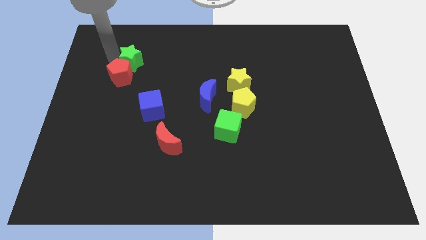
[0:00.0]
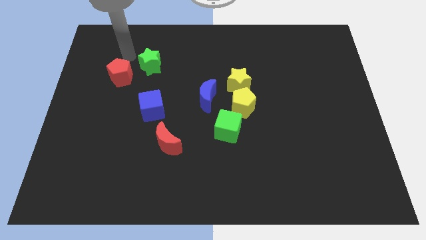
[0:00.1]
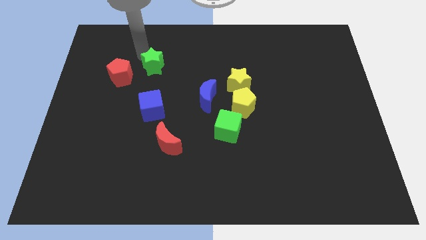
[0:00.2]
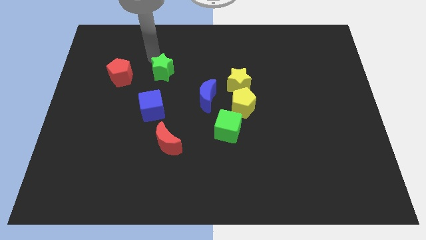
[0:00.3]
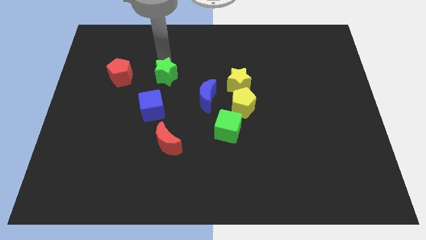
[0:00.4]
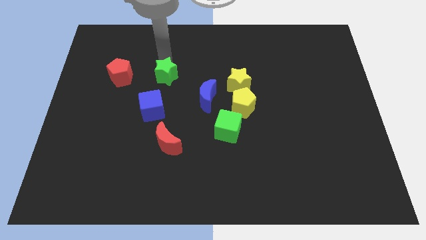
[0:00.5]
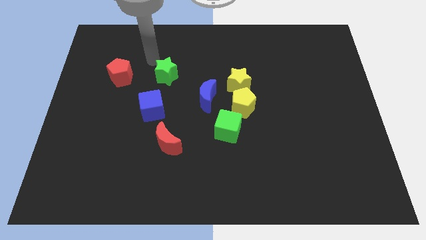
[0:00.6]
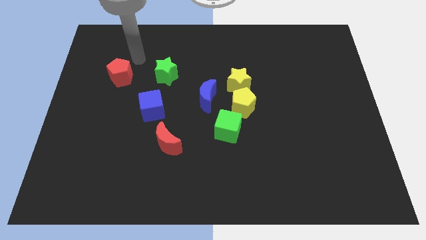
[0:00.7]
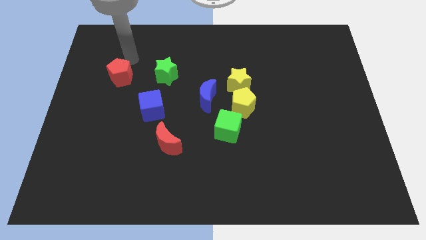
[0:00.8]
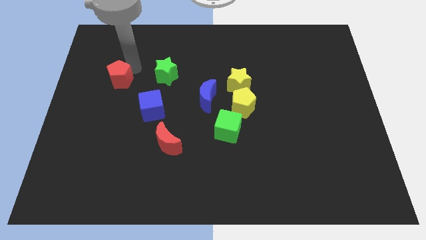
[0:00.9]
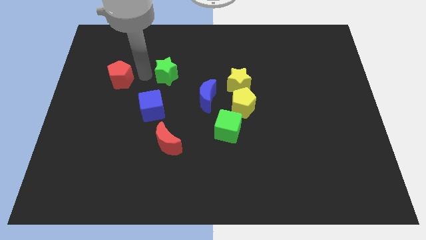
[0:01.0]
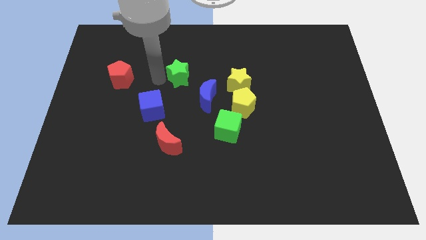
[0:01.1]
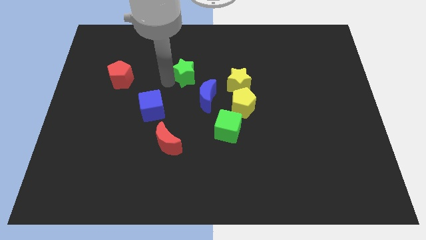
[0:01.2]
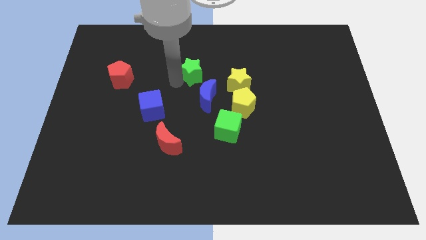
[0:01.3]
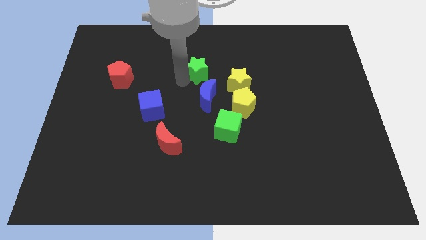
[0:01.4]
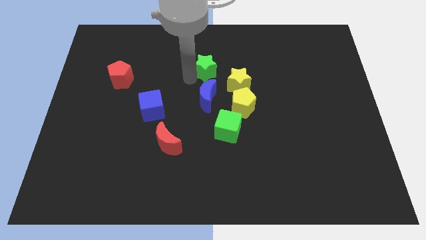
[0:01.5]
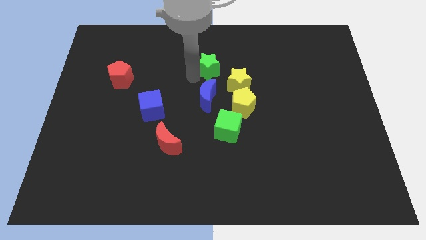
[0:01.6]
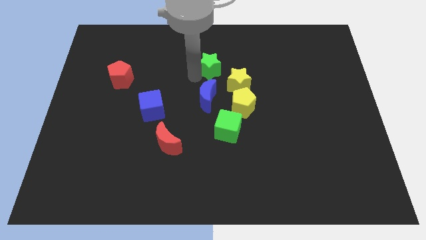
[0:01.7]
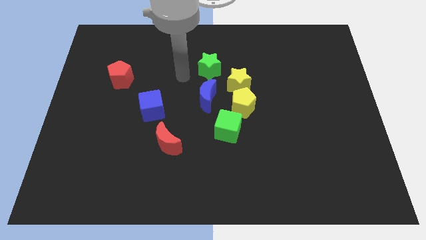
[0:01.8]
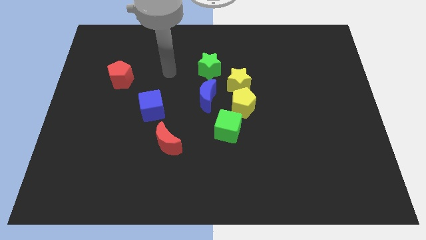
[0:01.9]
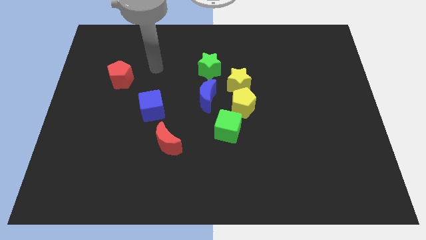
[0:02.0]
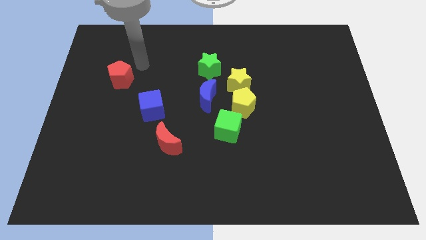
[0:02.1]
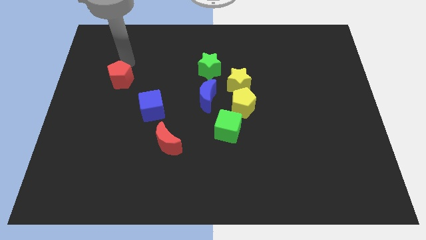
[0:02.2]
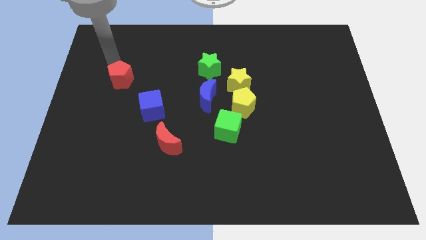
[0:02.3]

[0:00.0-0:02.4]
push the green star to the top of blue crescent

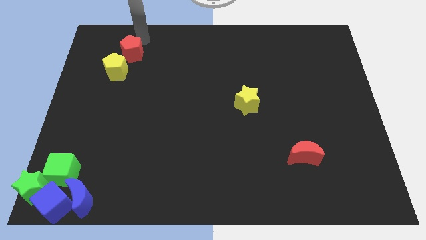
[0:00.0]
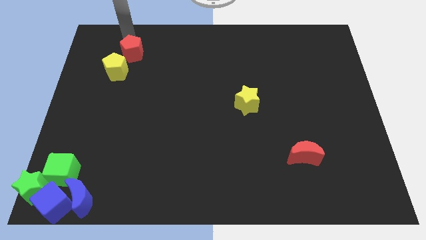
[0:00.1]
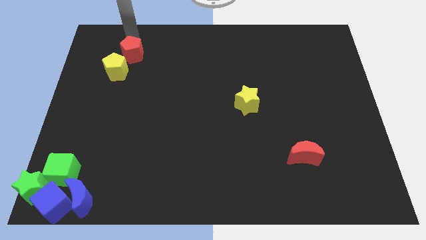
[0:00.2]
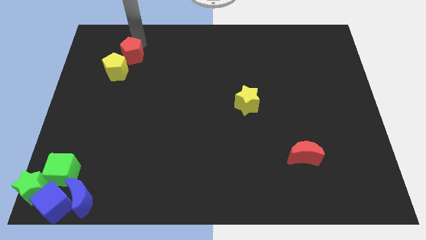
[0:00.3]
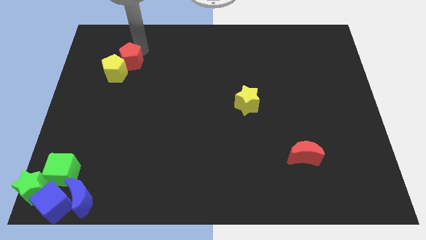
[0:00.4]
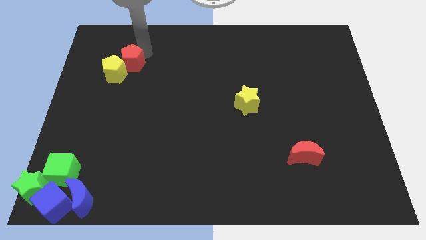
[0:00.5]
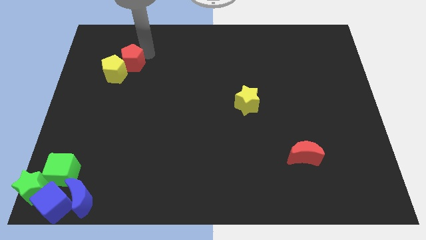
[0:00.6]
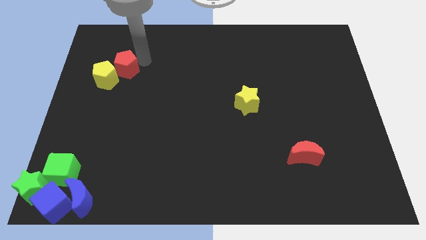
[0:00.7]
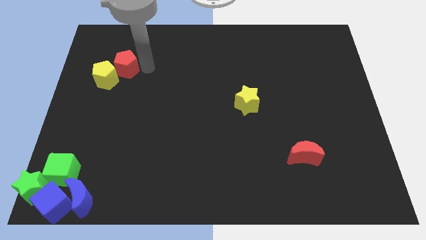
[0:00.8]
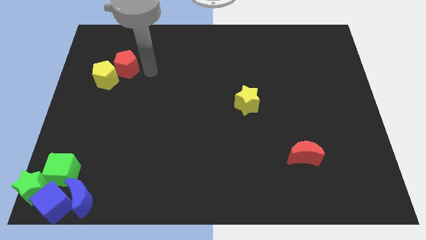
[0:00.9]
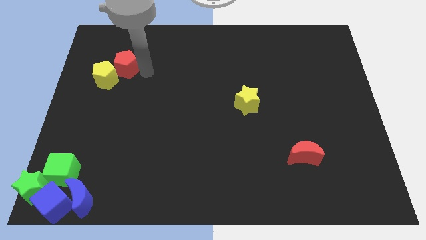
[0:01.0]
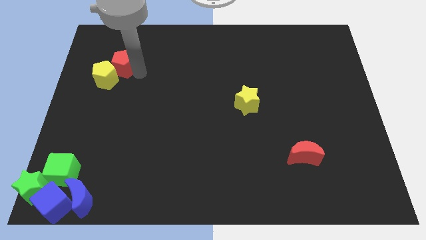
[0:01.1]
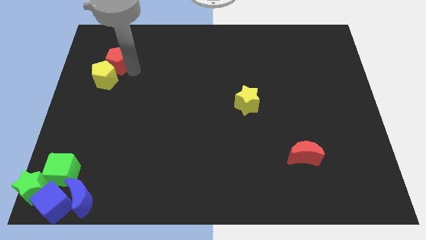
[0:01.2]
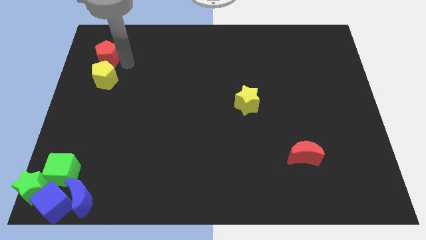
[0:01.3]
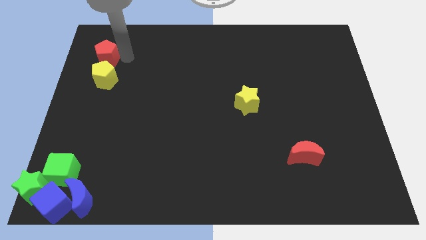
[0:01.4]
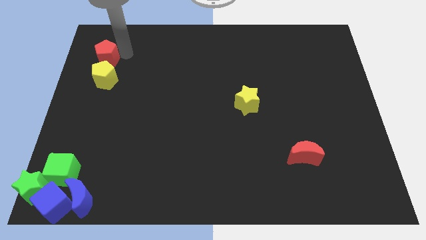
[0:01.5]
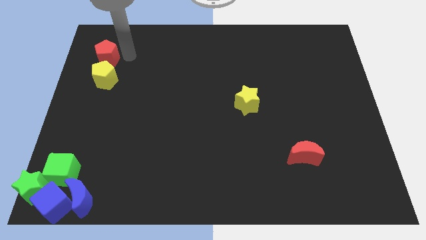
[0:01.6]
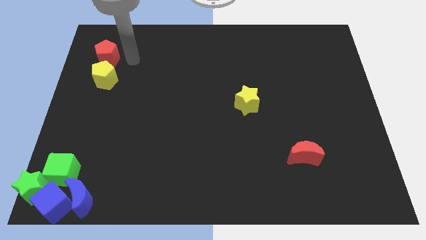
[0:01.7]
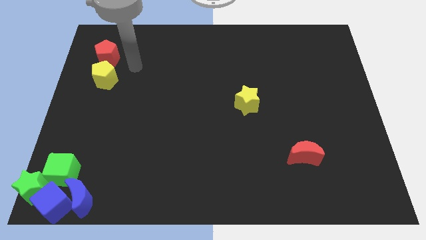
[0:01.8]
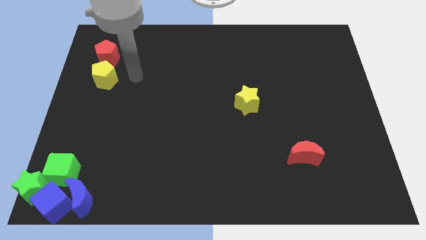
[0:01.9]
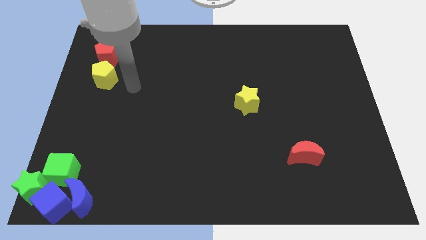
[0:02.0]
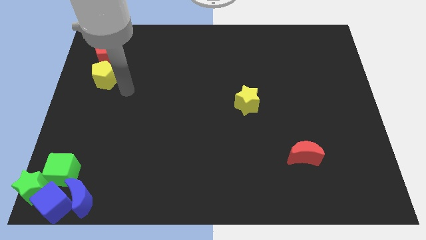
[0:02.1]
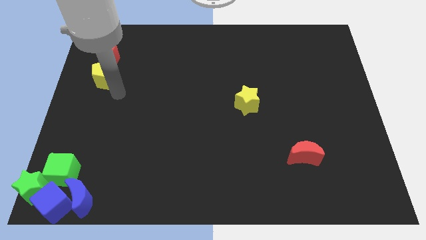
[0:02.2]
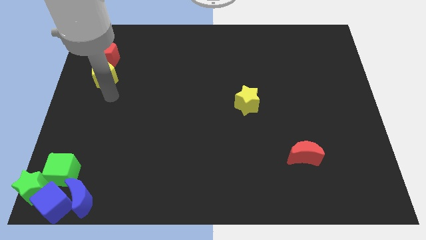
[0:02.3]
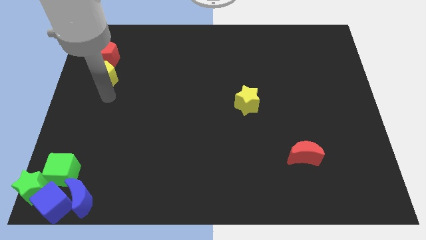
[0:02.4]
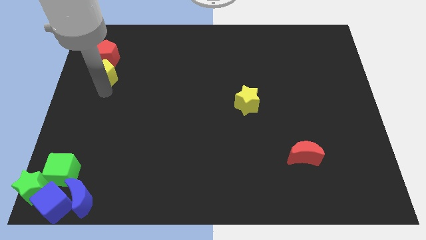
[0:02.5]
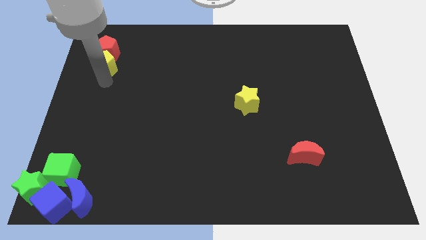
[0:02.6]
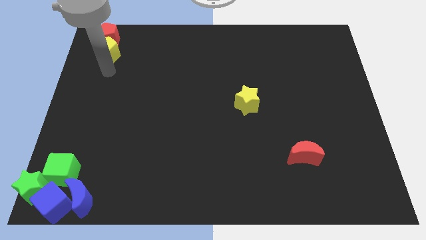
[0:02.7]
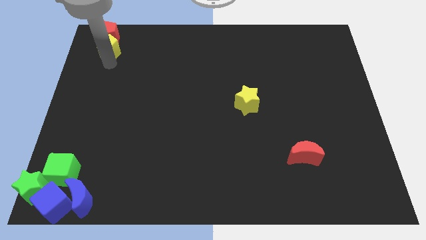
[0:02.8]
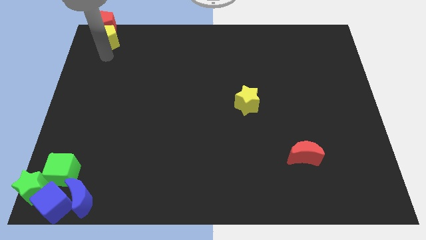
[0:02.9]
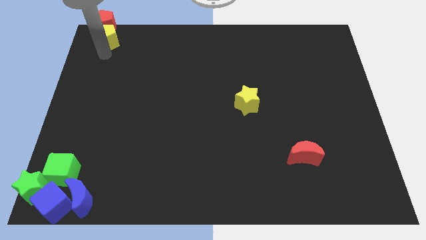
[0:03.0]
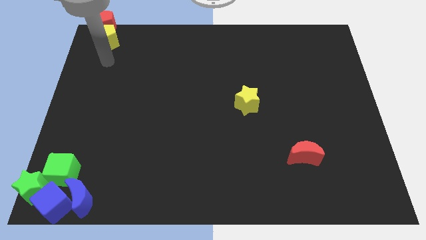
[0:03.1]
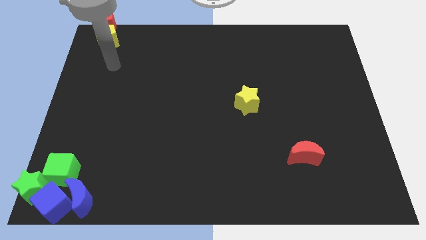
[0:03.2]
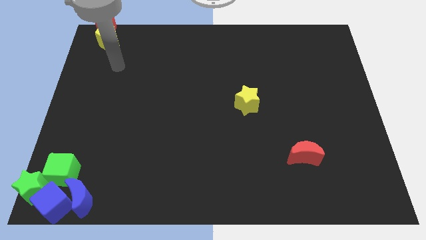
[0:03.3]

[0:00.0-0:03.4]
push the yellow pentagon into the red pentagon towards the top left of the board

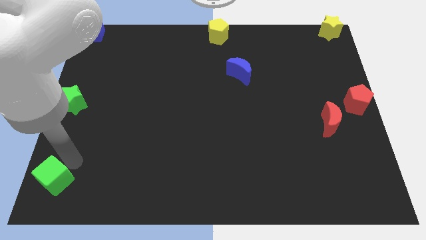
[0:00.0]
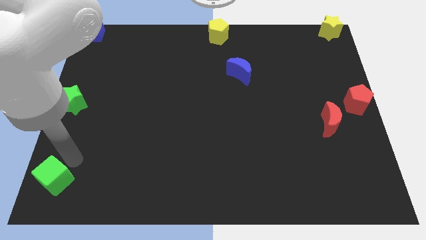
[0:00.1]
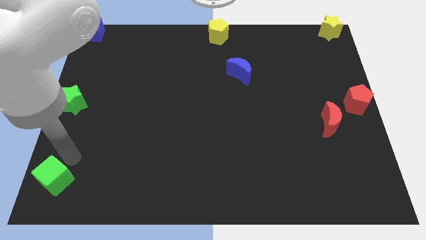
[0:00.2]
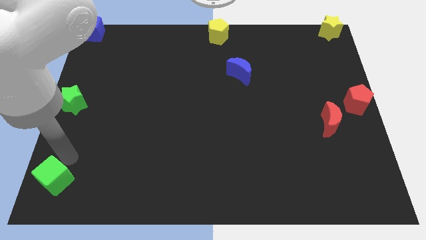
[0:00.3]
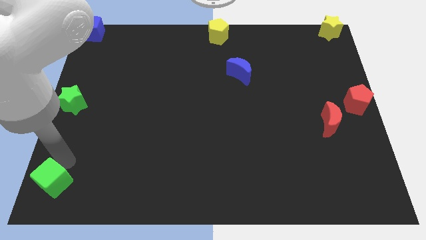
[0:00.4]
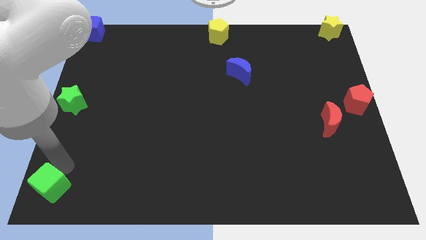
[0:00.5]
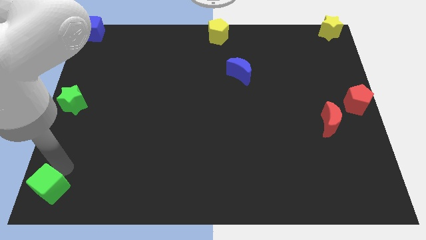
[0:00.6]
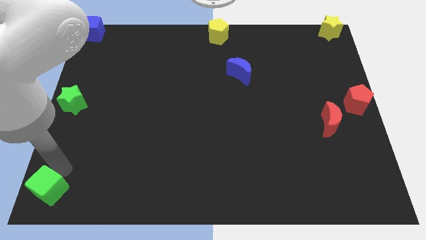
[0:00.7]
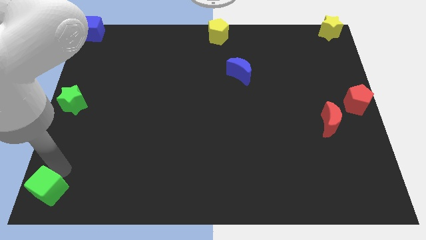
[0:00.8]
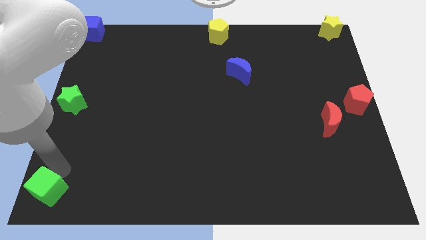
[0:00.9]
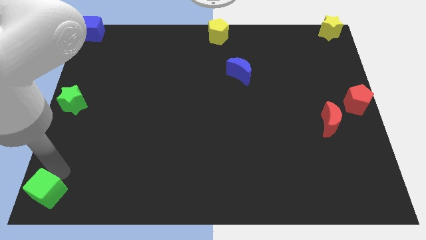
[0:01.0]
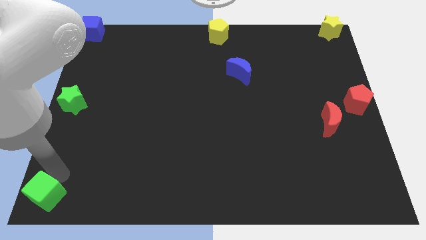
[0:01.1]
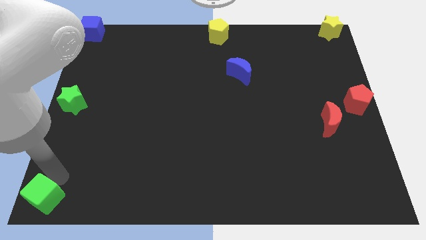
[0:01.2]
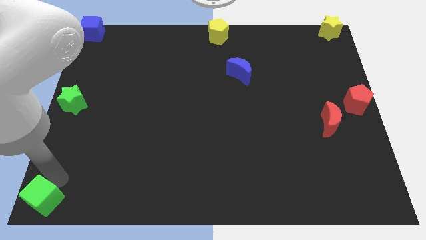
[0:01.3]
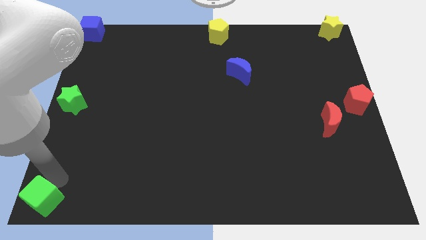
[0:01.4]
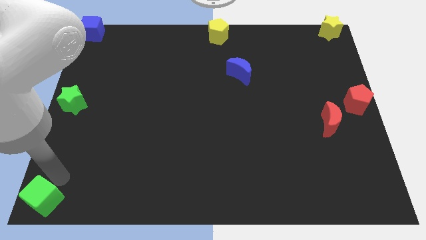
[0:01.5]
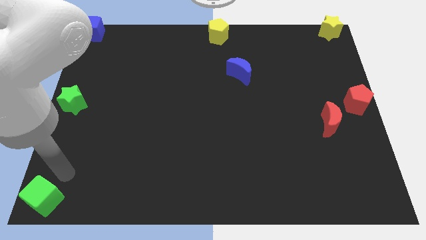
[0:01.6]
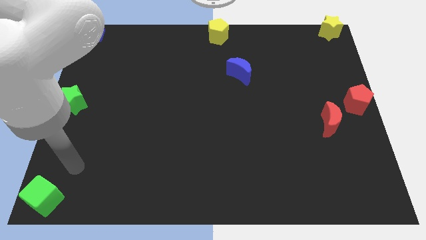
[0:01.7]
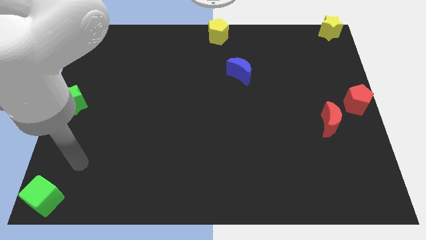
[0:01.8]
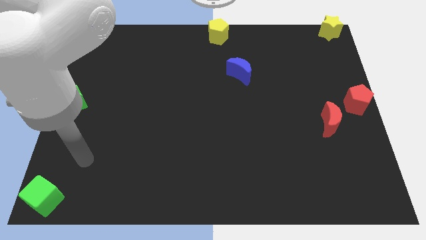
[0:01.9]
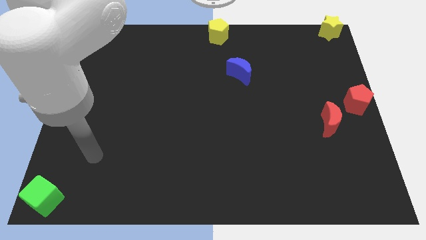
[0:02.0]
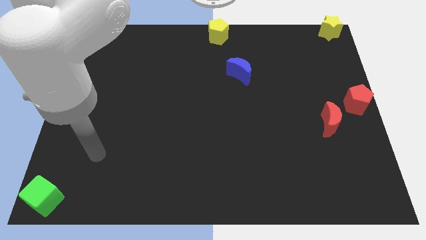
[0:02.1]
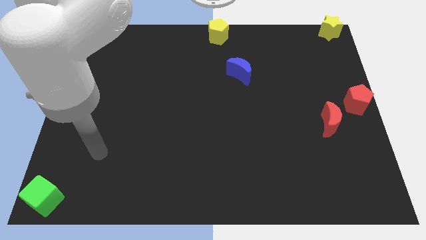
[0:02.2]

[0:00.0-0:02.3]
push the green cube to the left bottom corner of the board

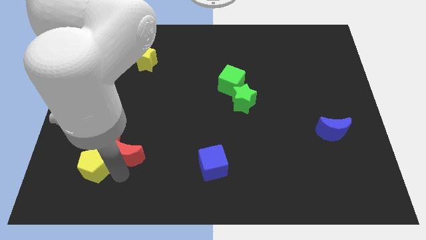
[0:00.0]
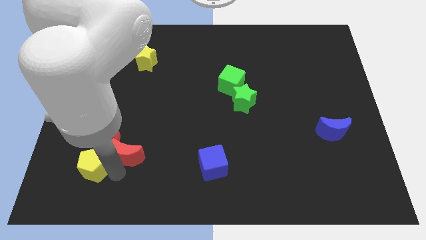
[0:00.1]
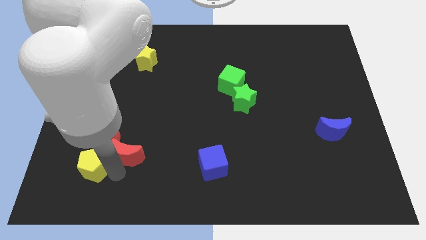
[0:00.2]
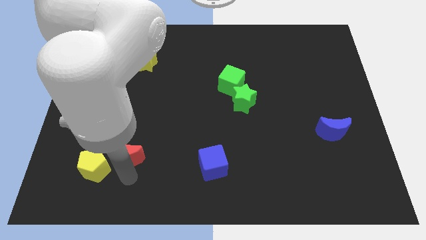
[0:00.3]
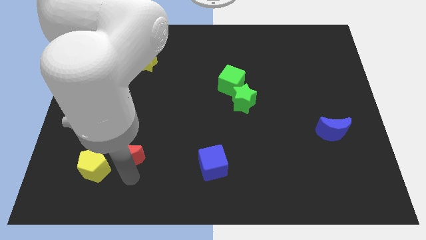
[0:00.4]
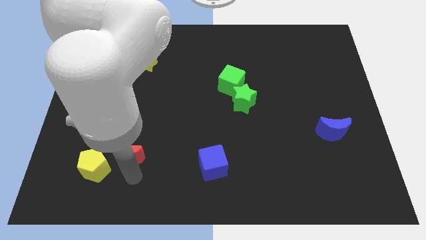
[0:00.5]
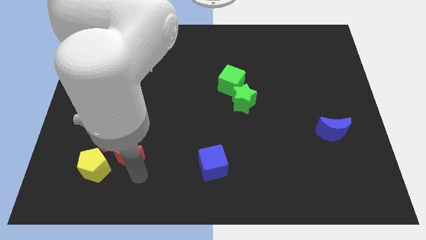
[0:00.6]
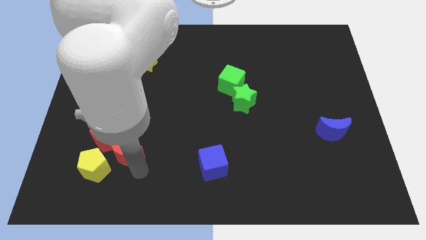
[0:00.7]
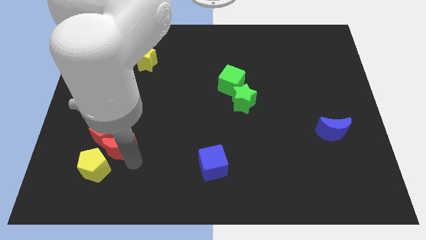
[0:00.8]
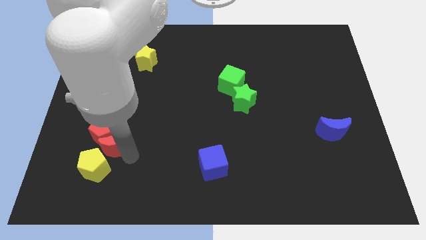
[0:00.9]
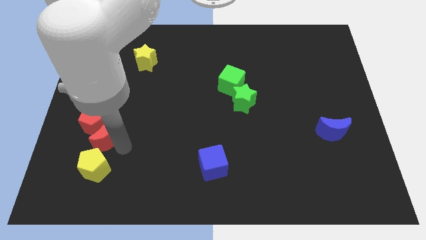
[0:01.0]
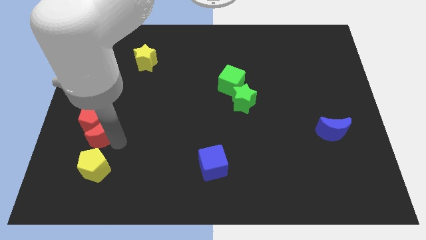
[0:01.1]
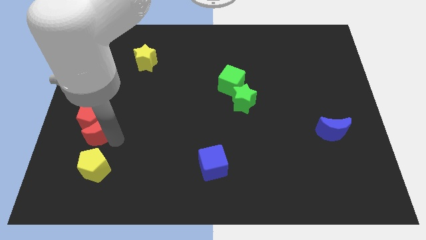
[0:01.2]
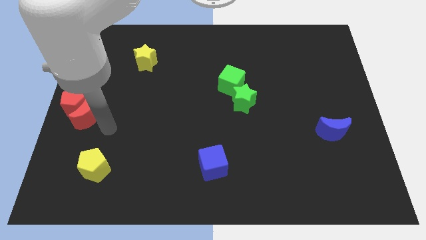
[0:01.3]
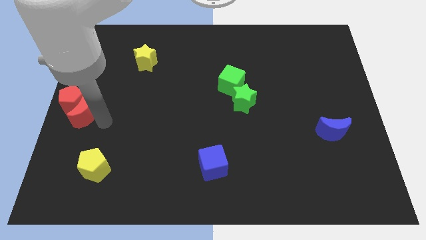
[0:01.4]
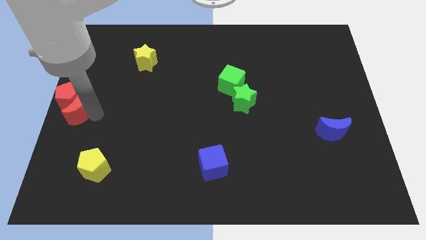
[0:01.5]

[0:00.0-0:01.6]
push the red moon into the red pentagon
